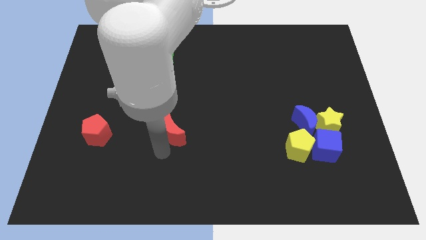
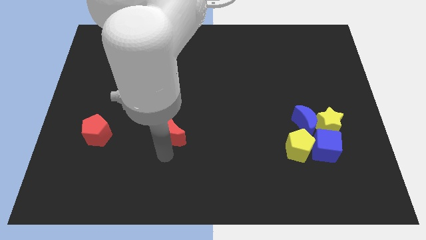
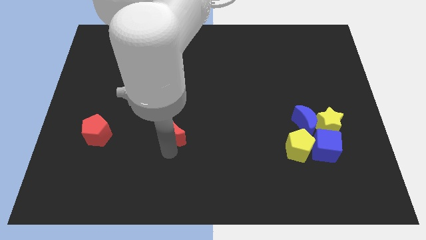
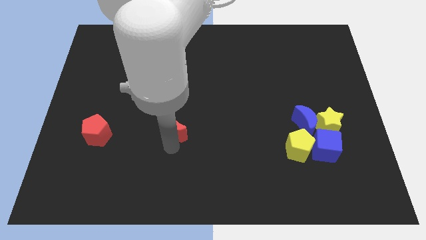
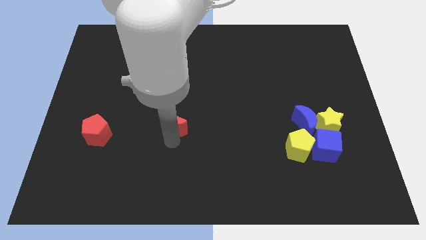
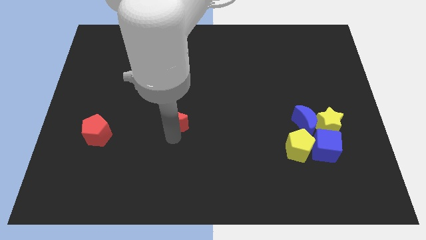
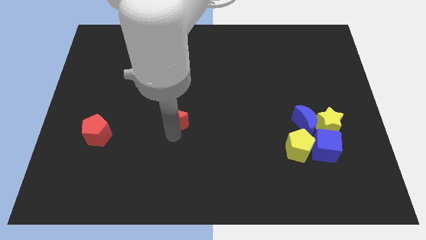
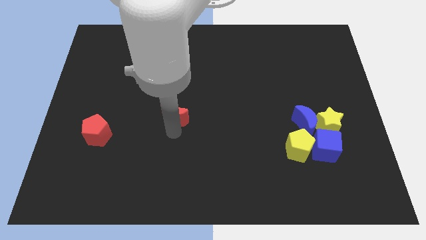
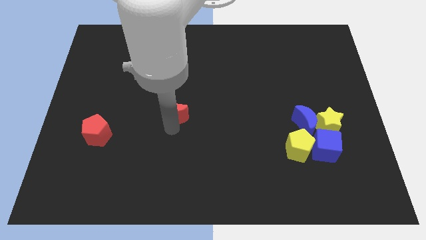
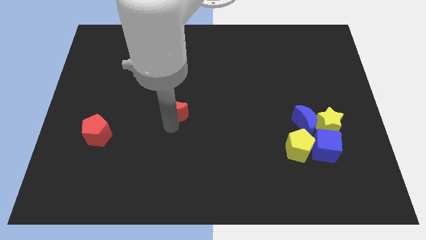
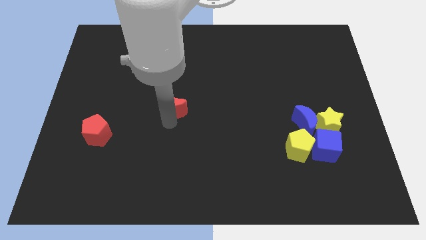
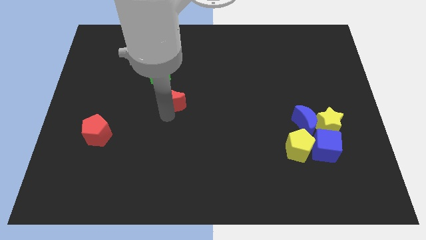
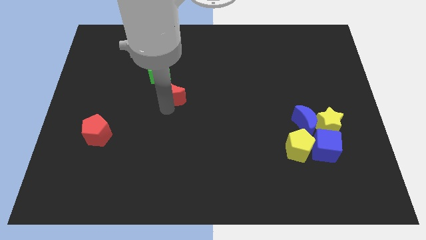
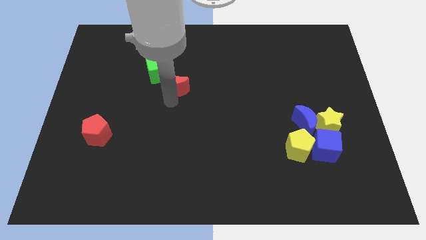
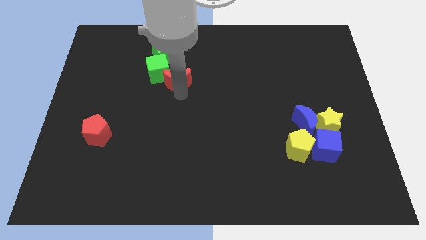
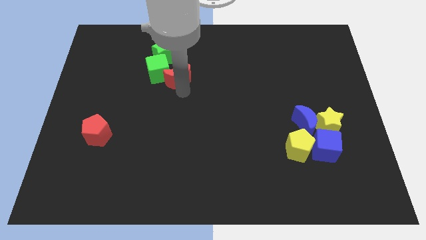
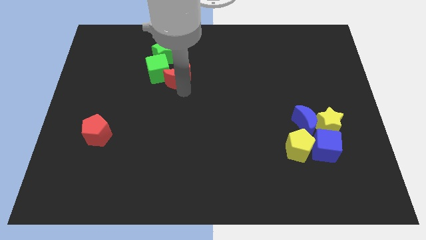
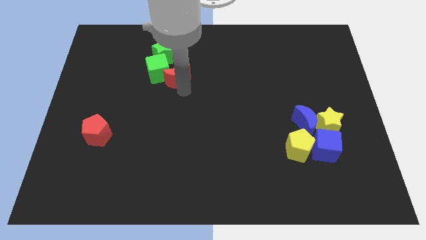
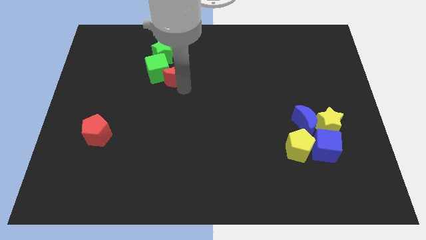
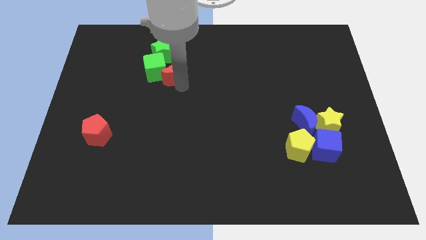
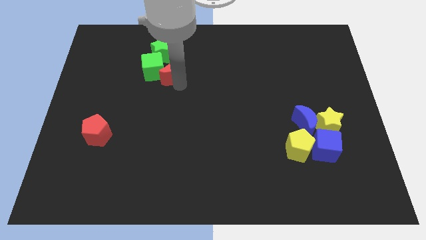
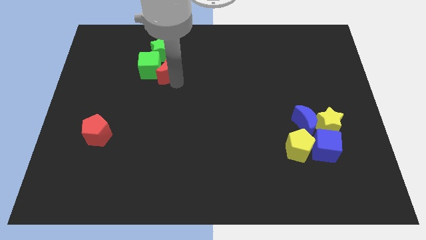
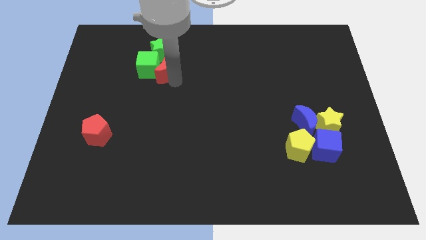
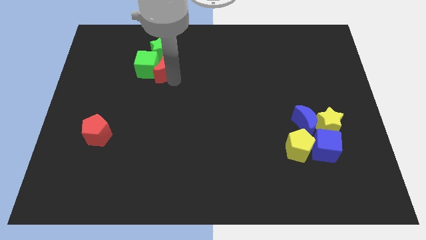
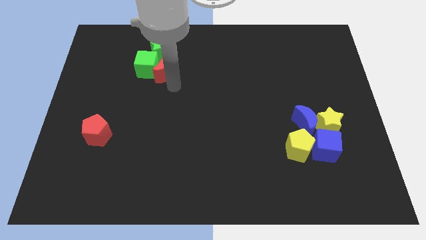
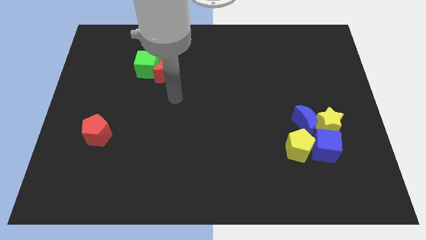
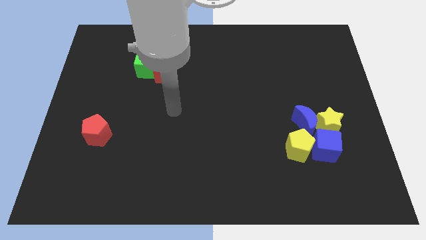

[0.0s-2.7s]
push the red moon into the green cube

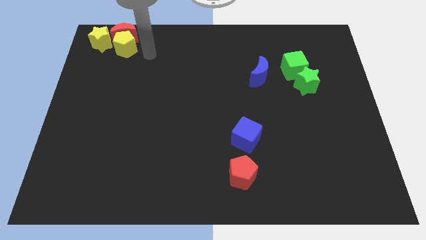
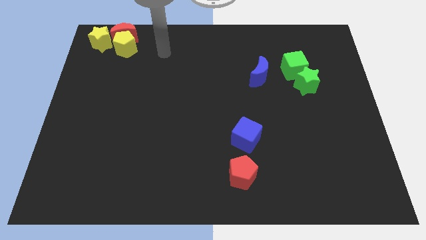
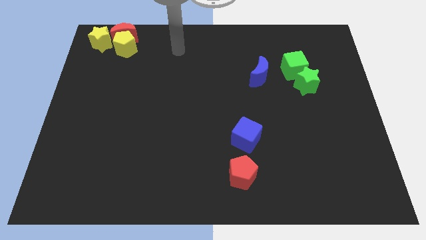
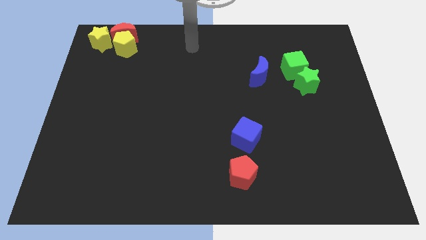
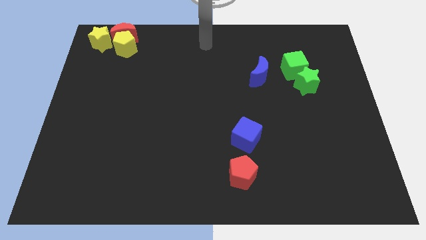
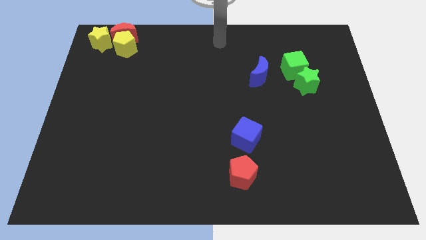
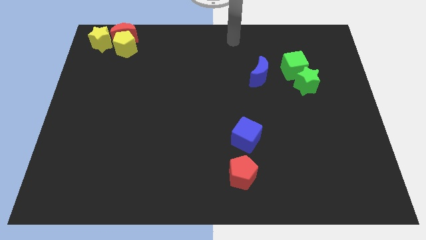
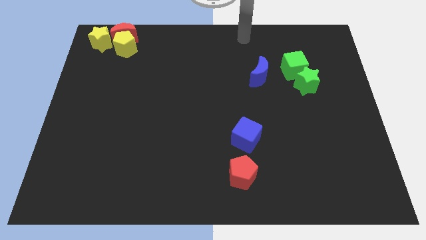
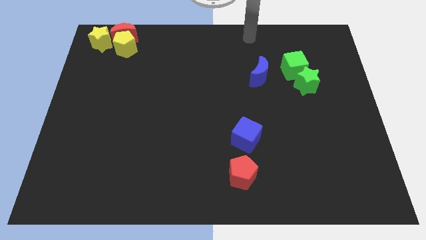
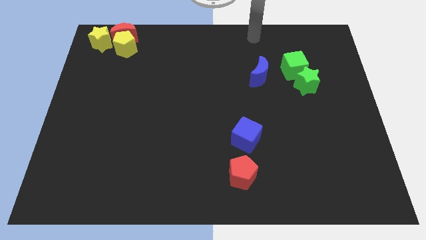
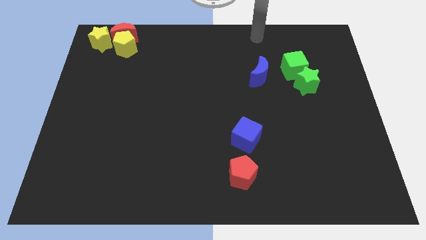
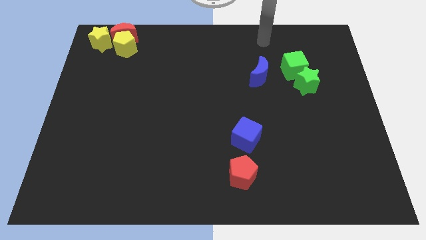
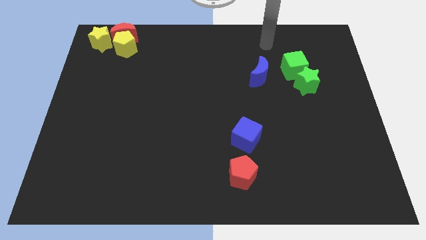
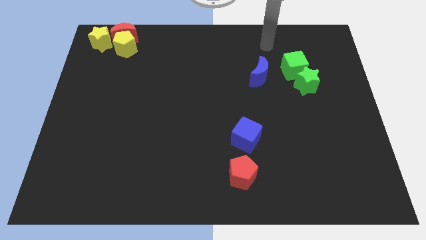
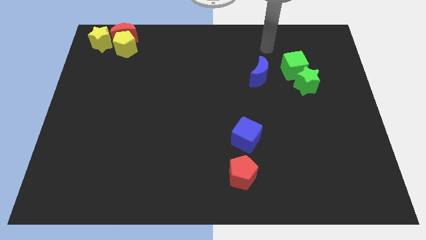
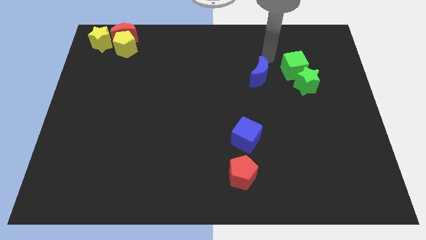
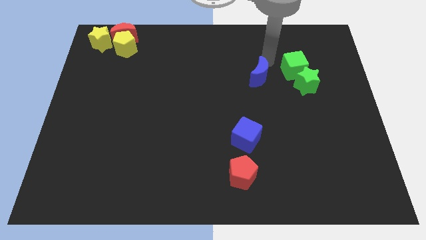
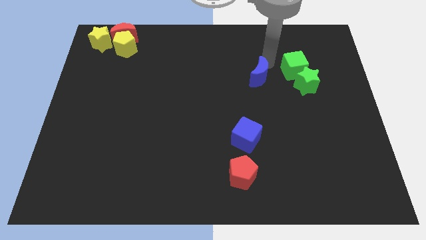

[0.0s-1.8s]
drag your arm to the top of blue moon

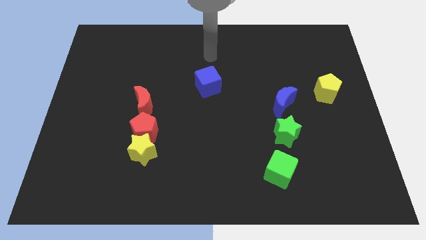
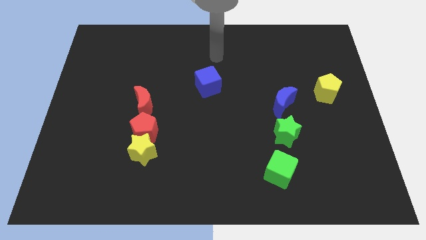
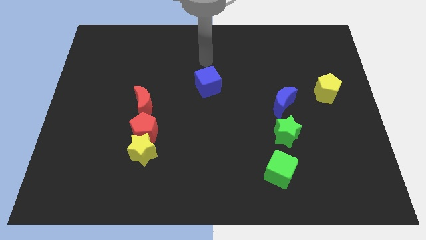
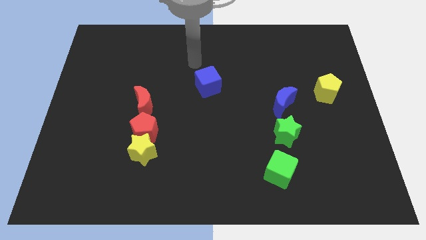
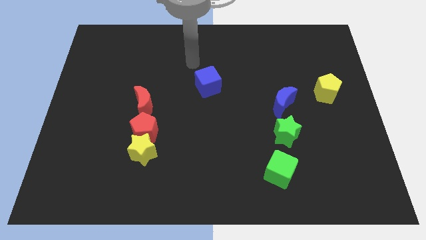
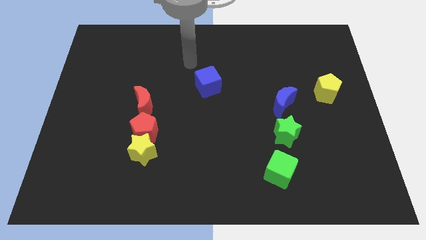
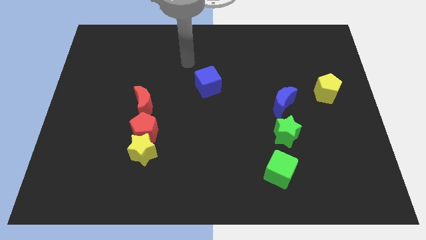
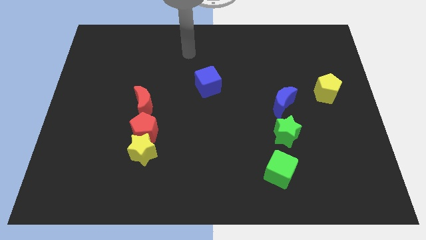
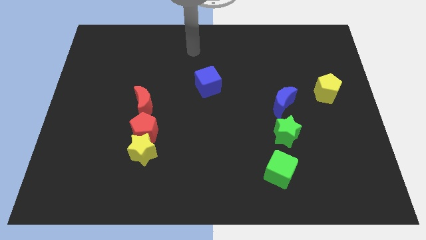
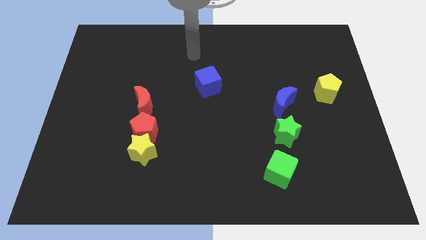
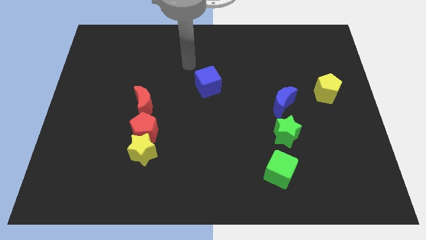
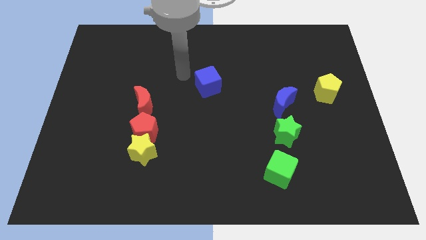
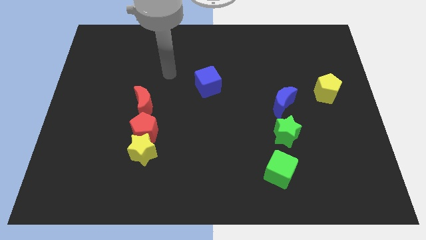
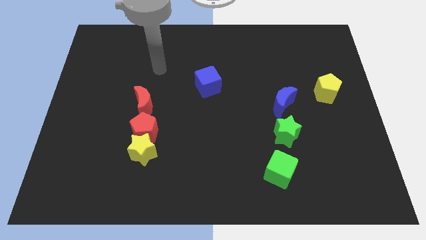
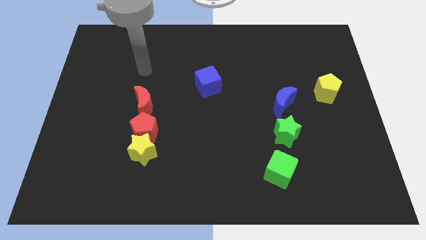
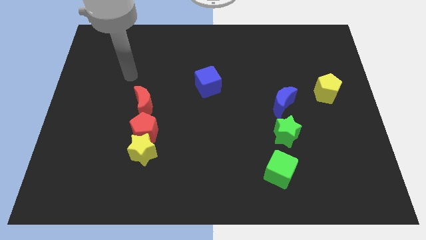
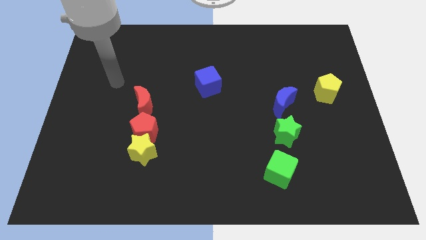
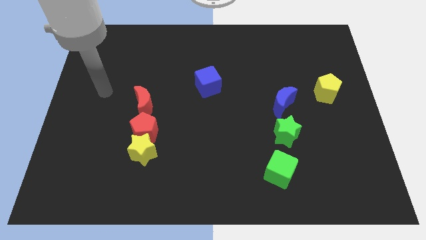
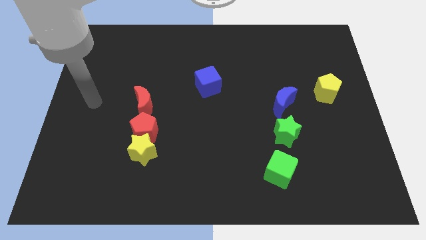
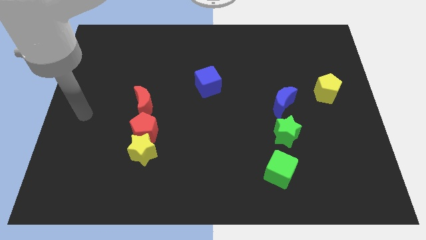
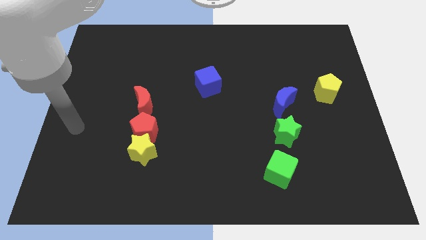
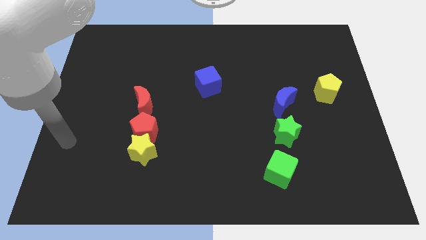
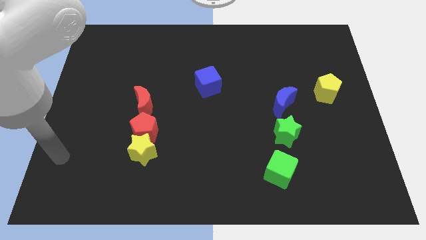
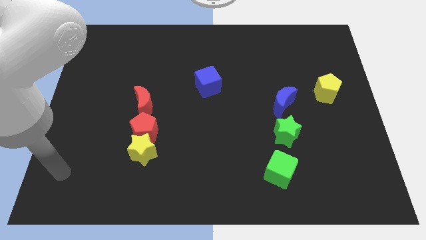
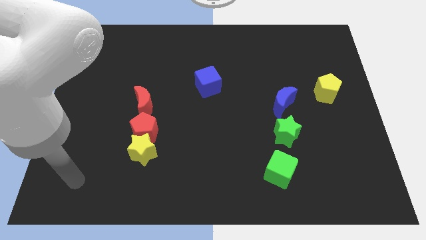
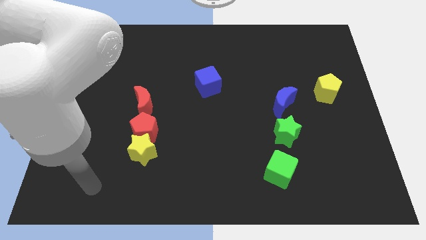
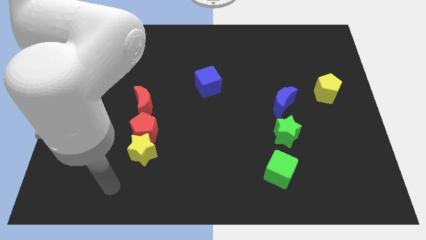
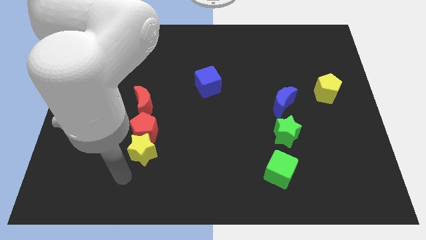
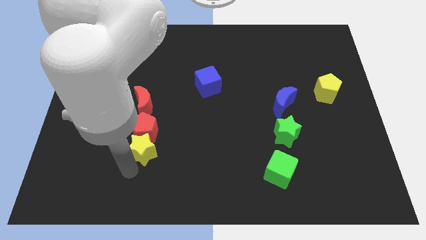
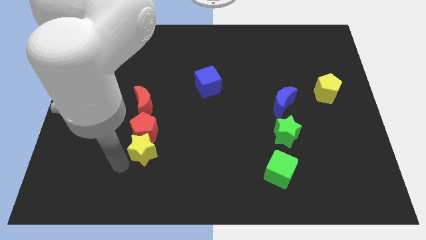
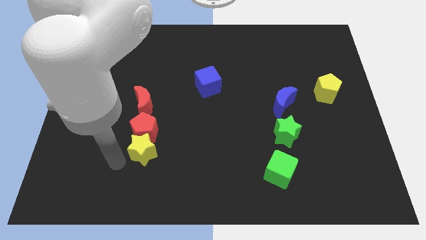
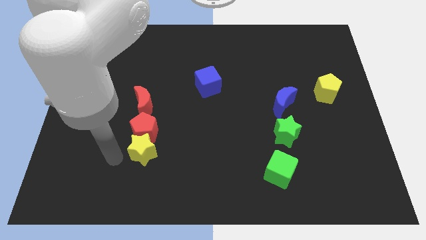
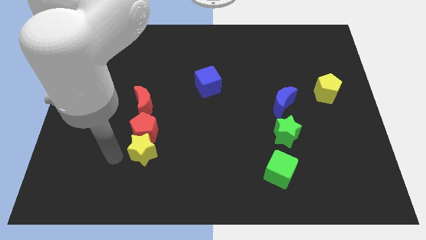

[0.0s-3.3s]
move your arm to the left of the yellow star

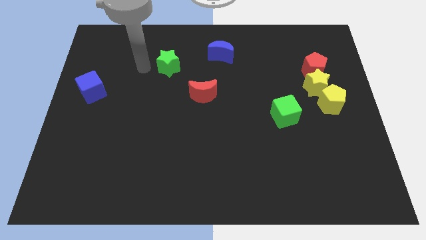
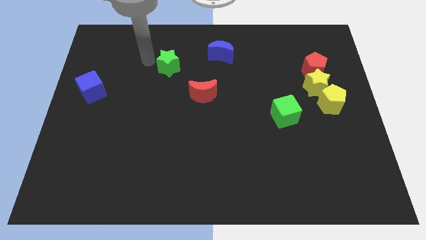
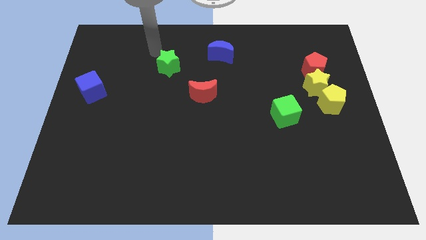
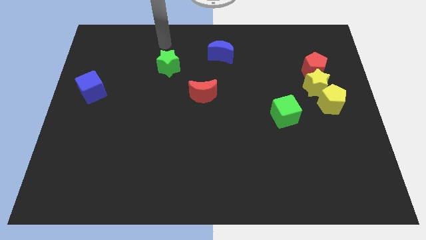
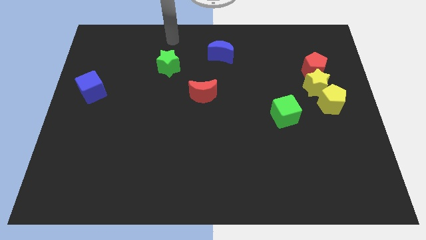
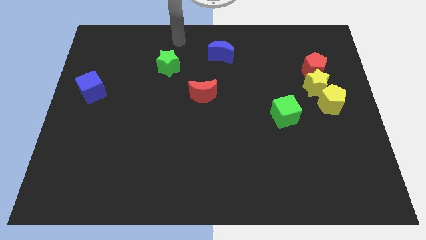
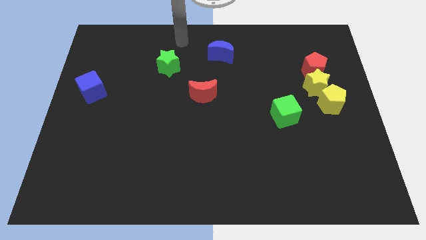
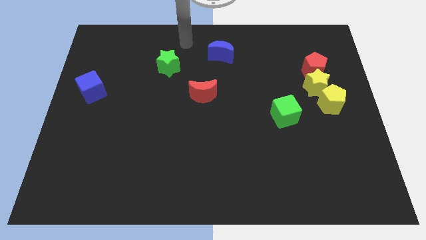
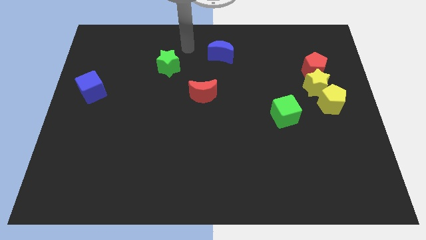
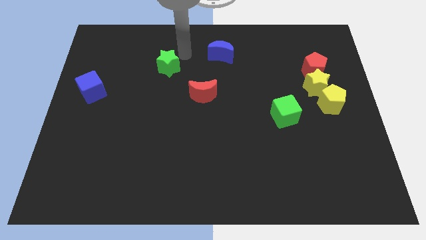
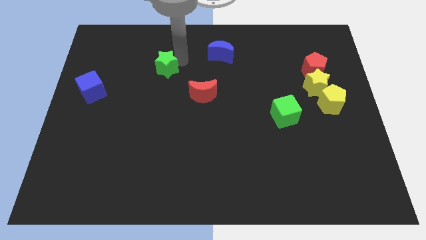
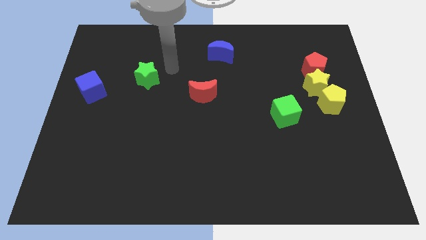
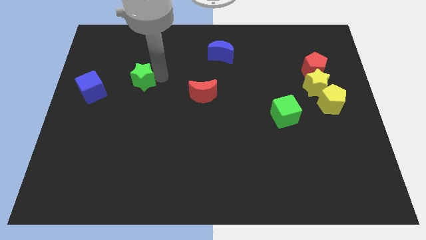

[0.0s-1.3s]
move the green star slightly down

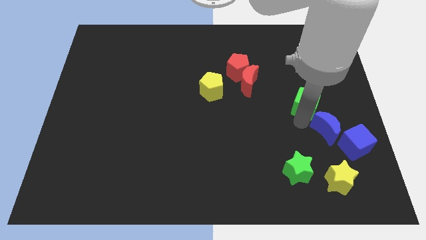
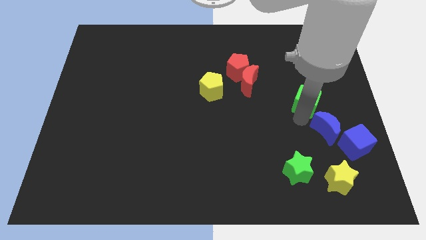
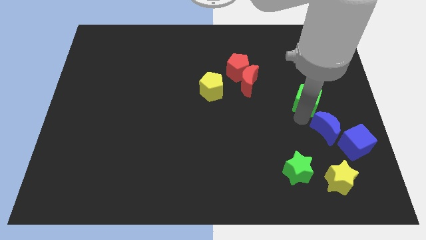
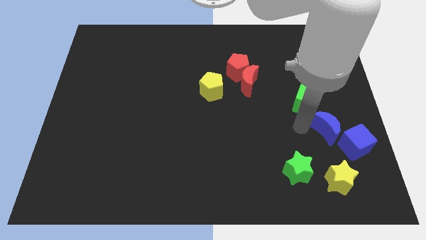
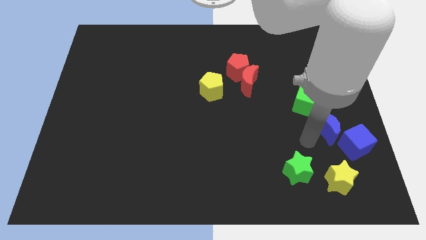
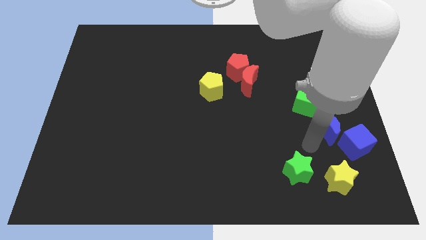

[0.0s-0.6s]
slightly push the green cube upwards
